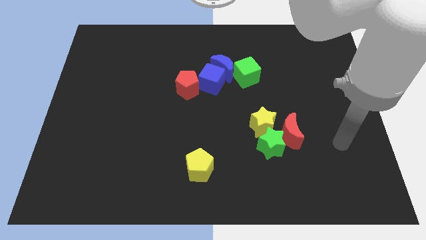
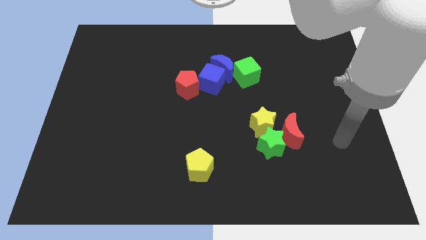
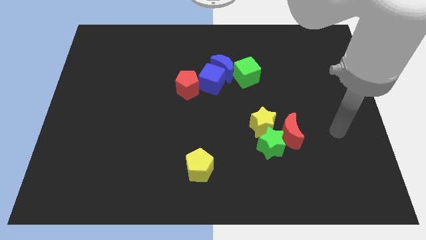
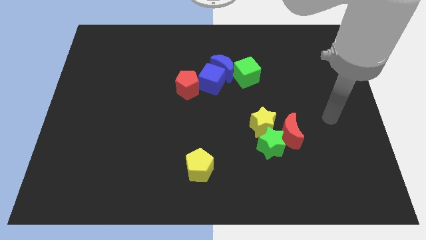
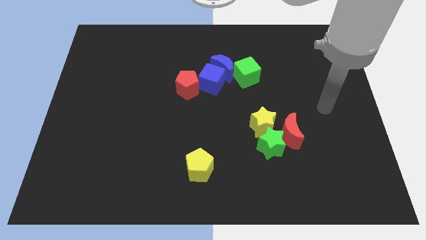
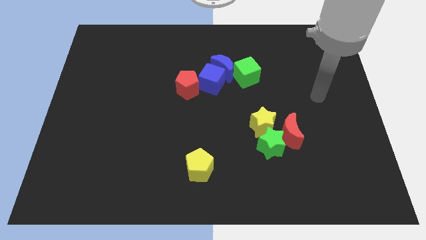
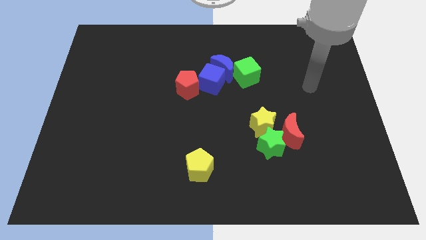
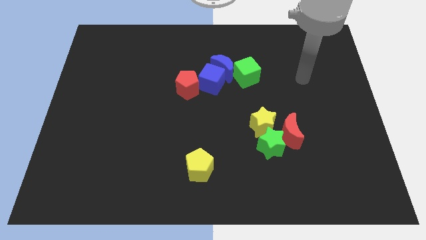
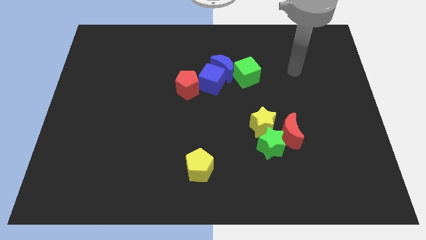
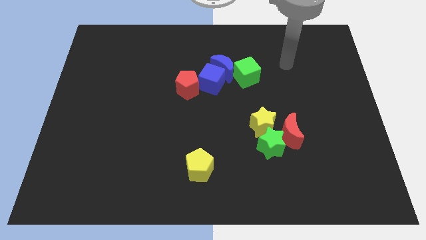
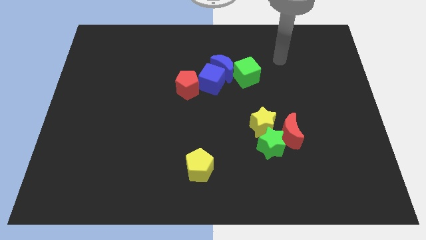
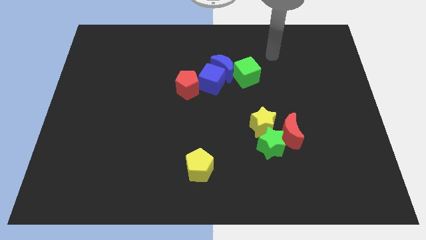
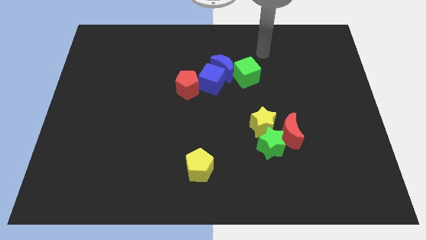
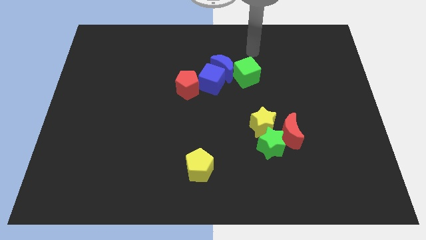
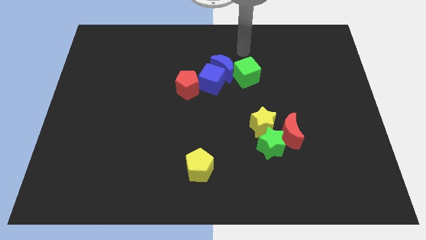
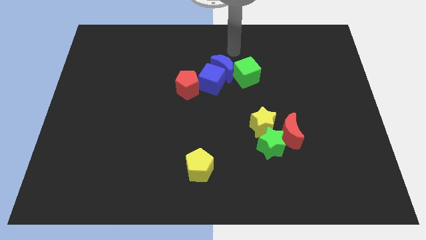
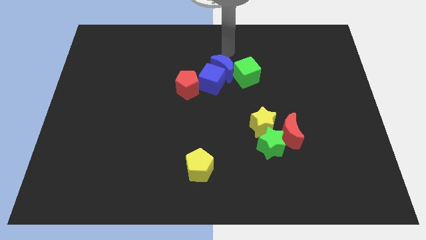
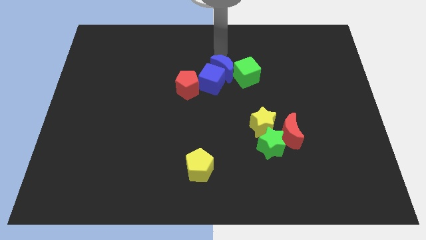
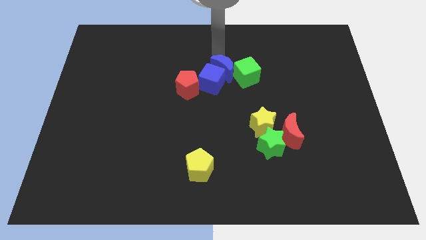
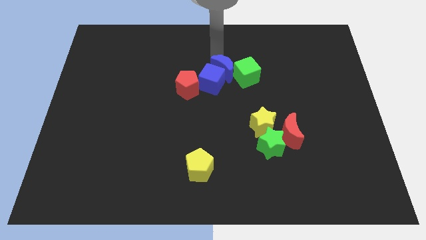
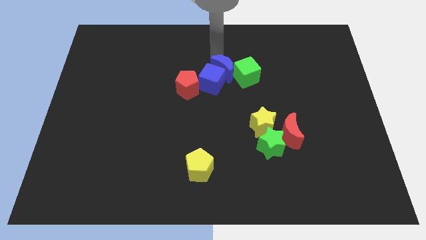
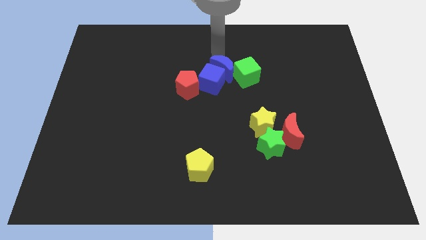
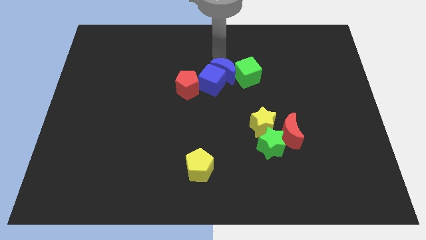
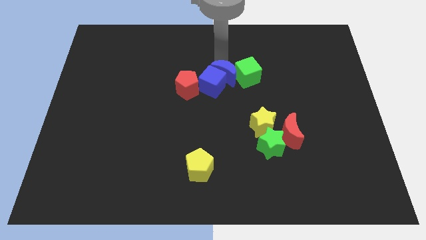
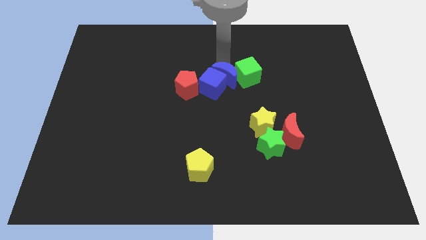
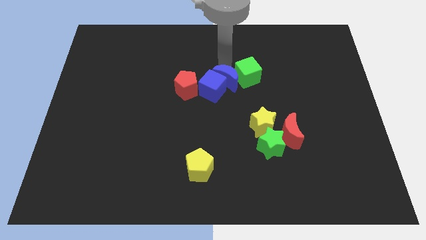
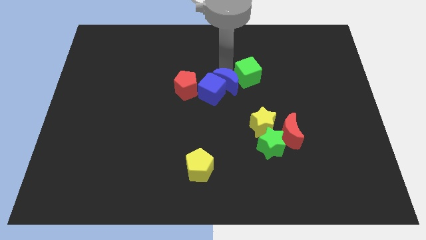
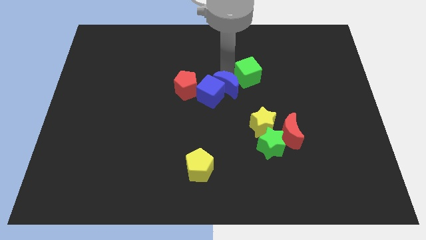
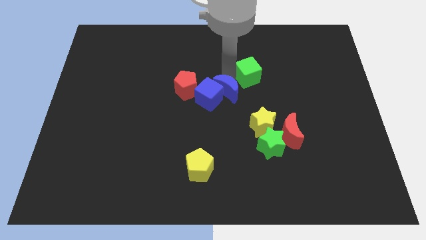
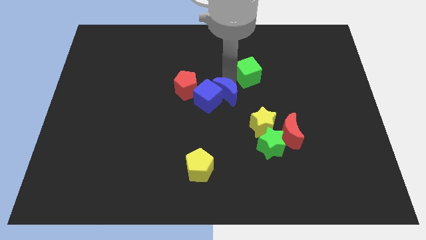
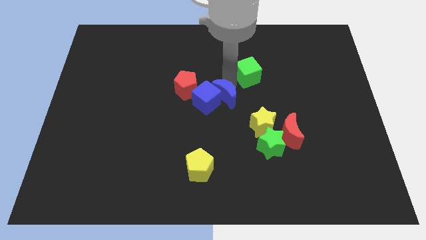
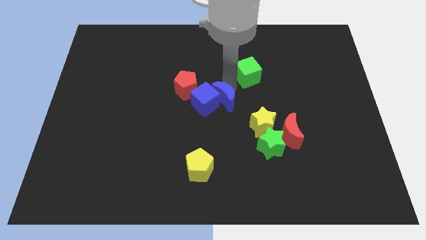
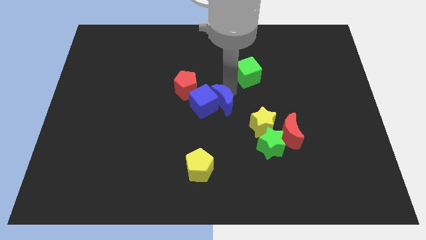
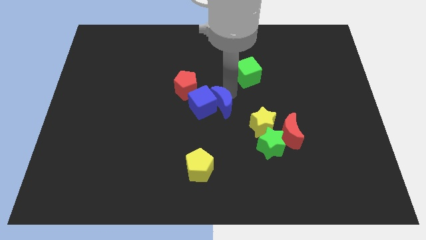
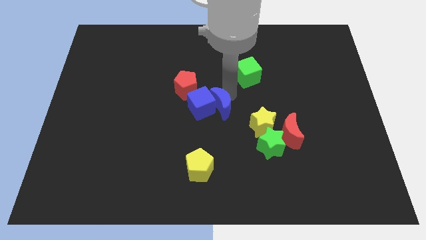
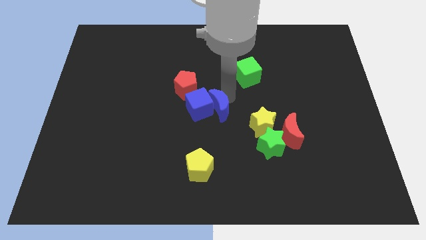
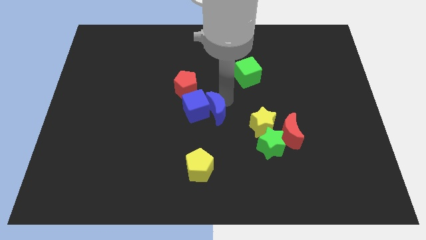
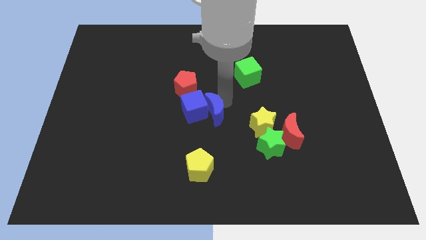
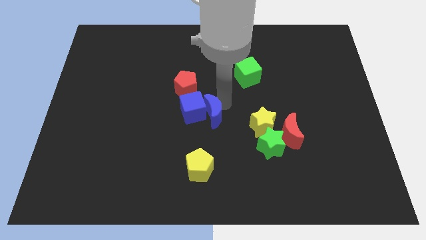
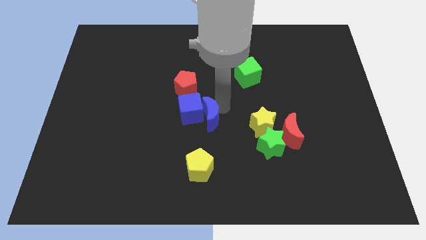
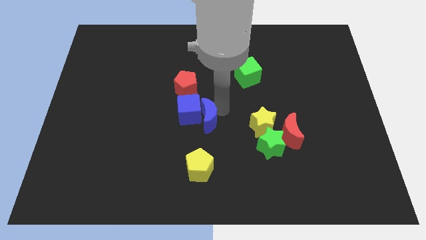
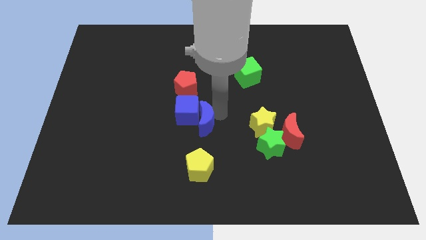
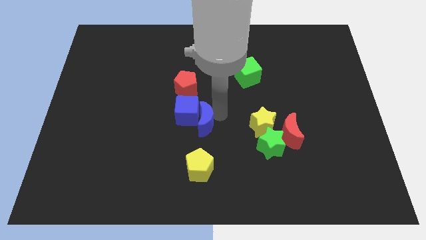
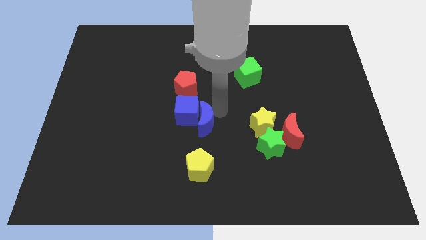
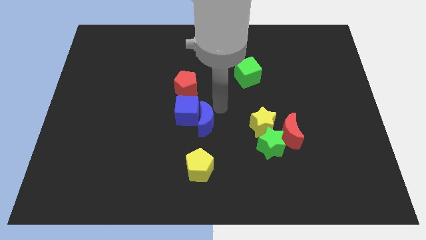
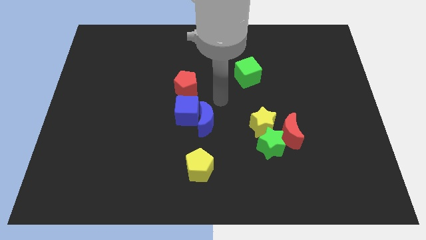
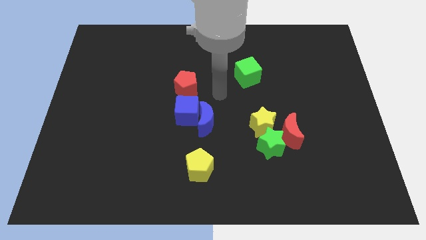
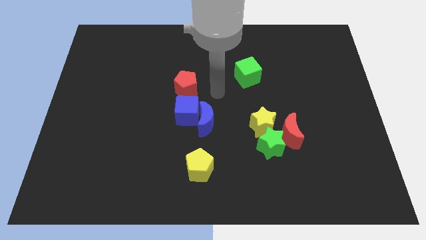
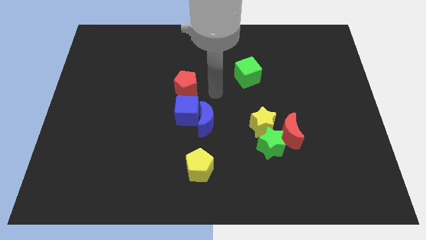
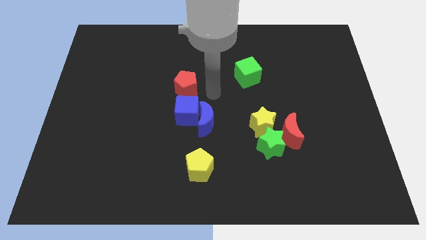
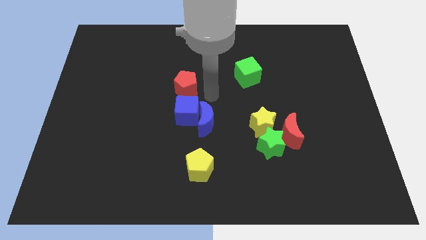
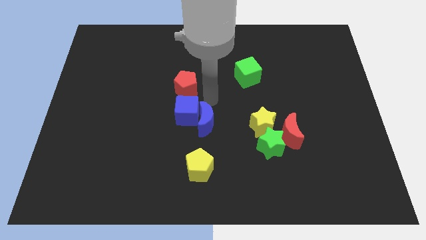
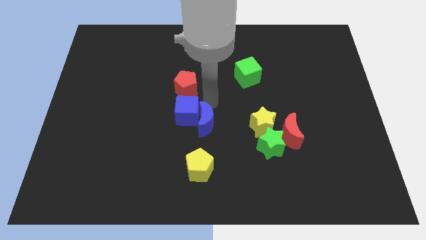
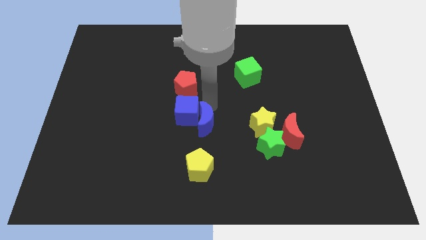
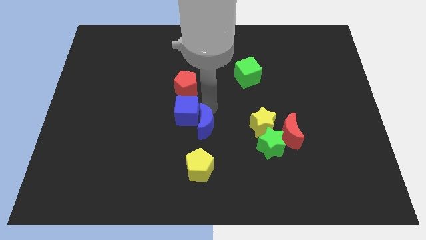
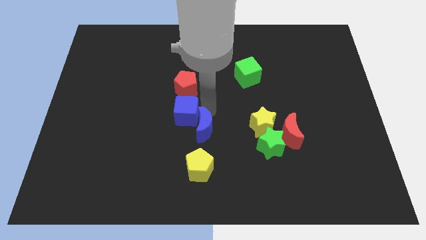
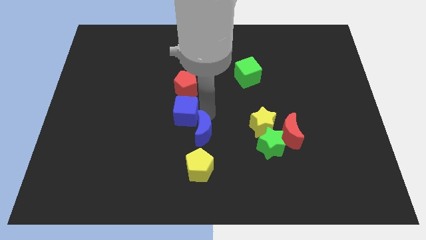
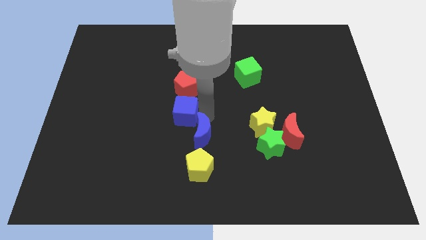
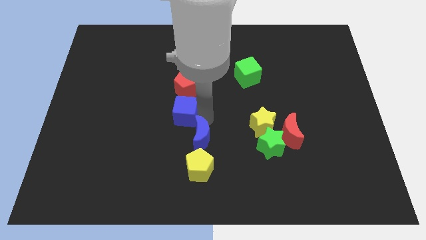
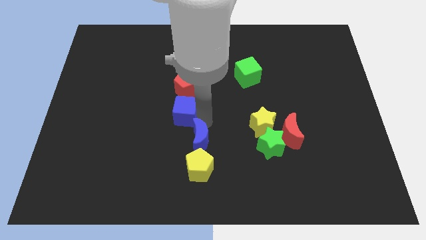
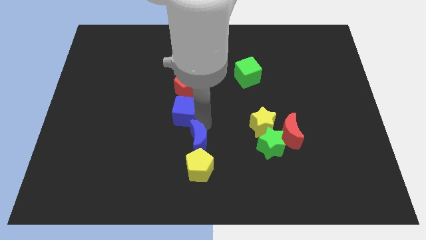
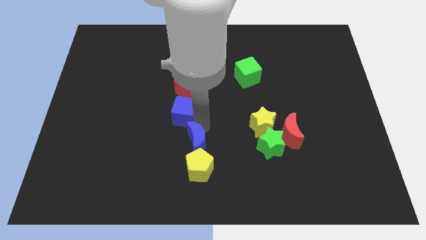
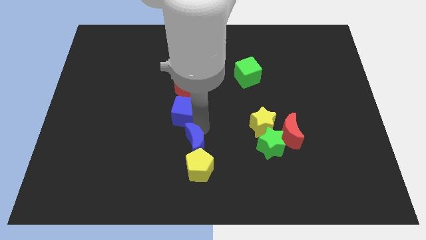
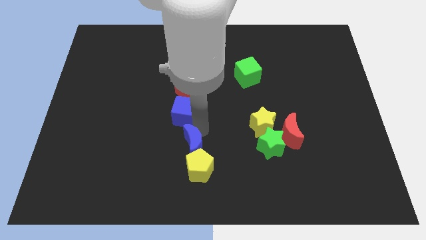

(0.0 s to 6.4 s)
put the blue moon to the yellow pentagon

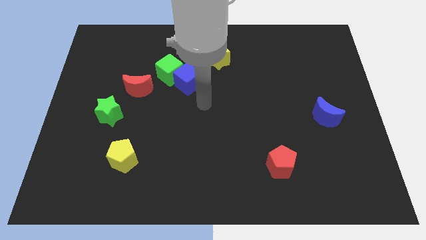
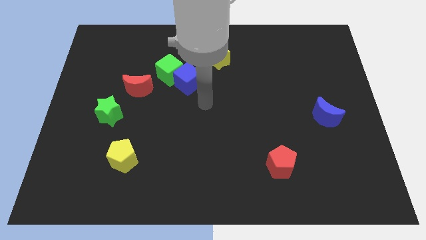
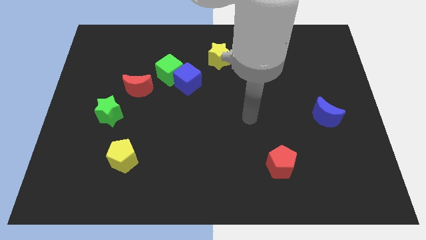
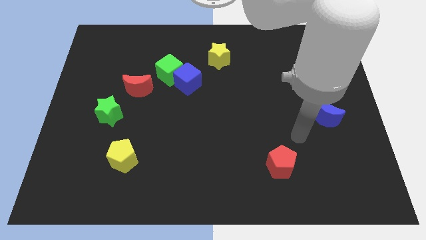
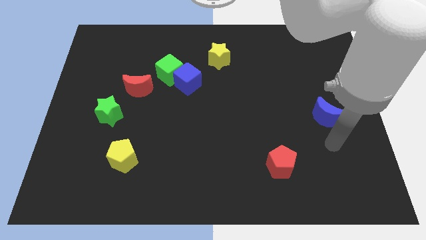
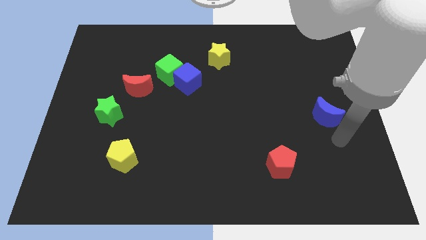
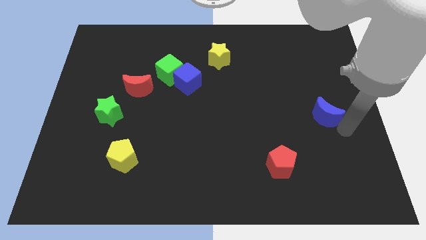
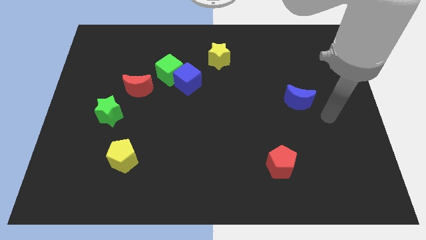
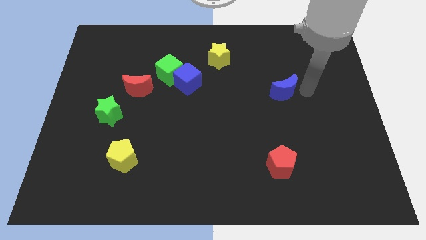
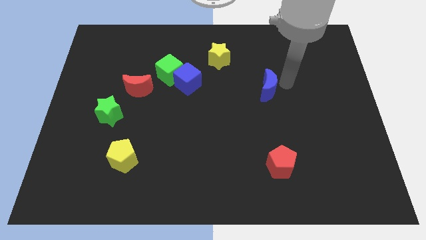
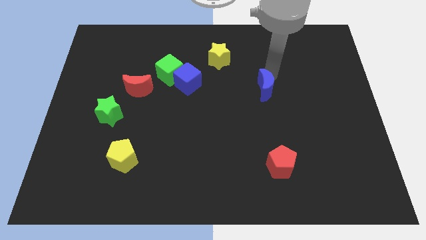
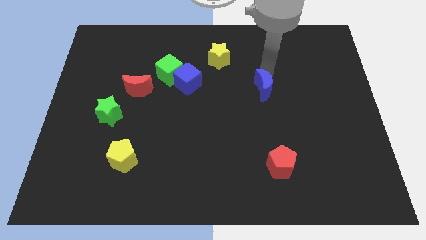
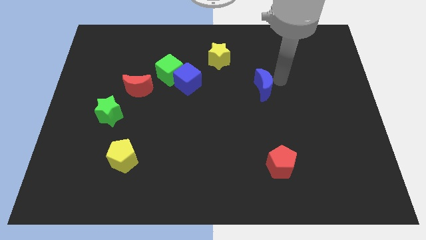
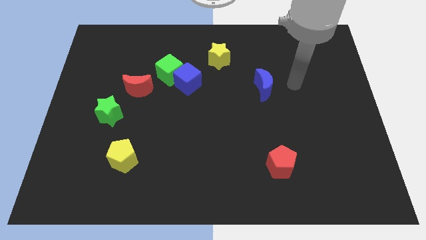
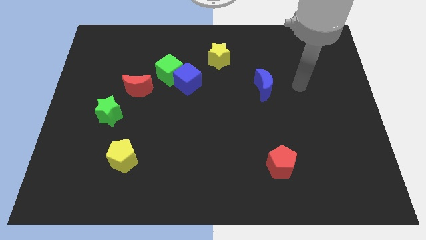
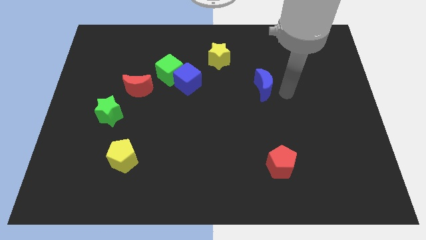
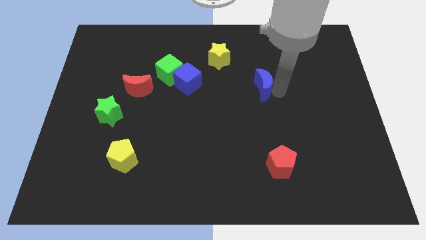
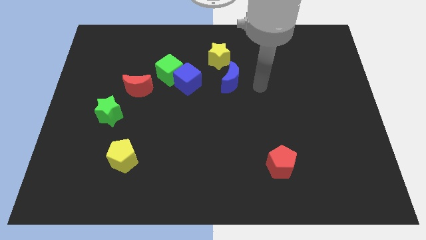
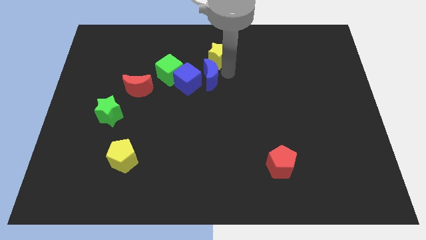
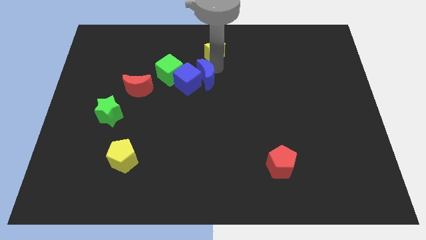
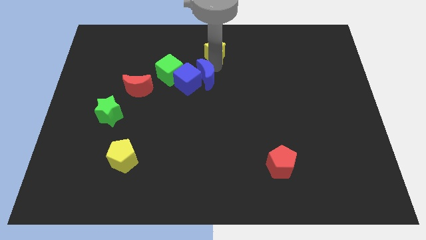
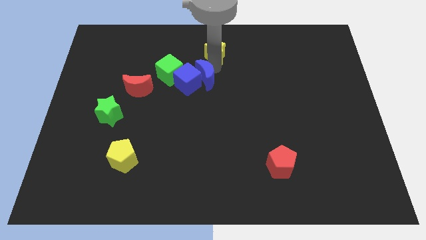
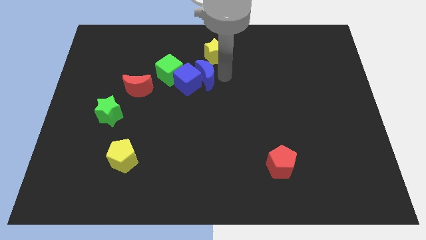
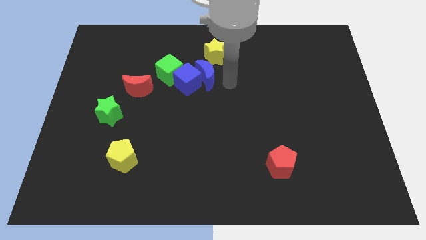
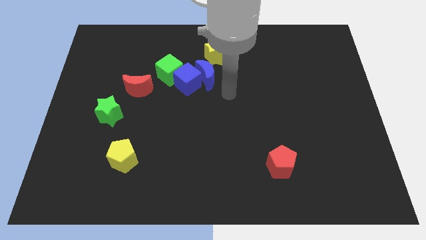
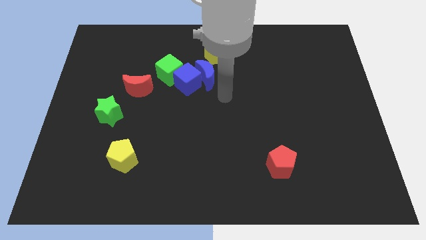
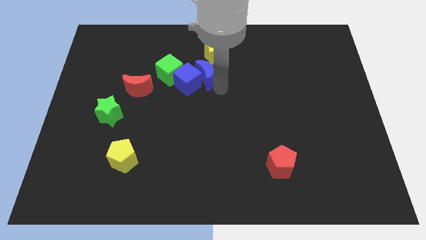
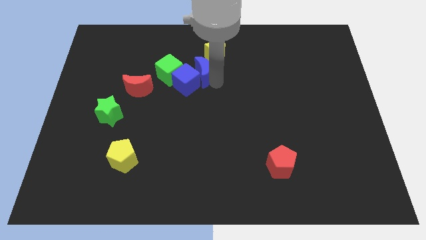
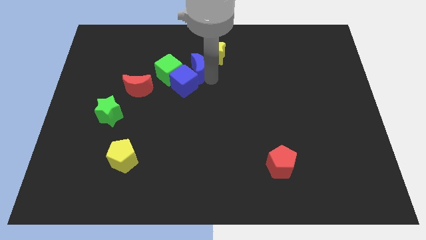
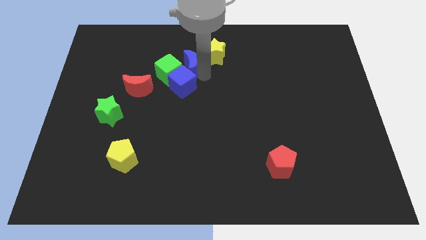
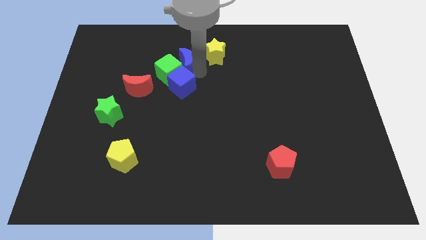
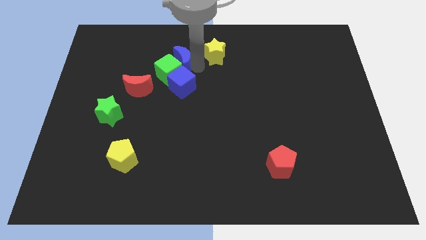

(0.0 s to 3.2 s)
move the blue moon to the green cube
